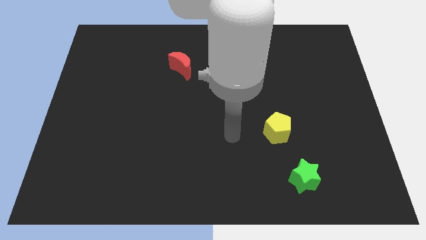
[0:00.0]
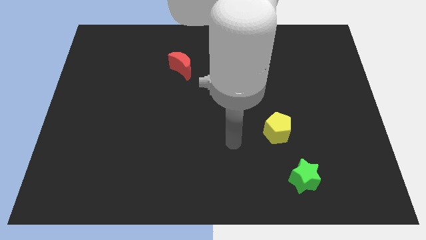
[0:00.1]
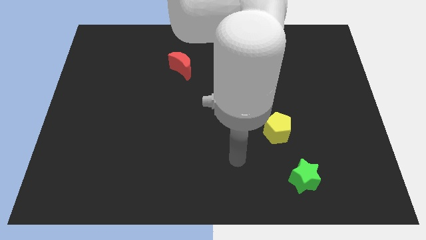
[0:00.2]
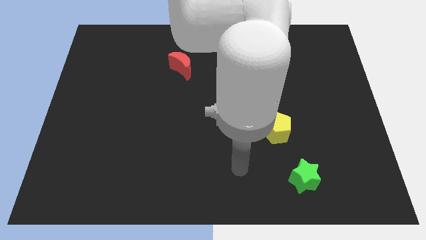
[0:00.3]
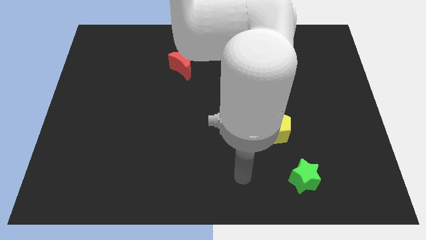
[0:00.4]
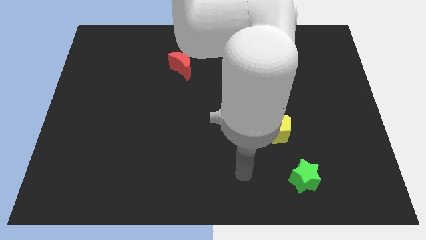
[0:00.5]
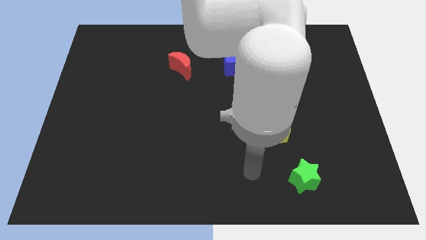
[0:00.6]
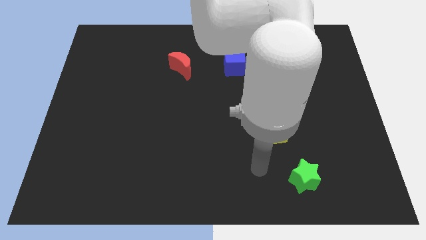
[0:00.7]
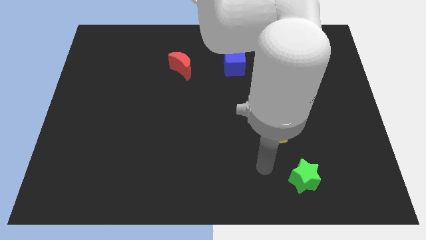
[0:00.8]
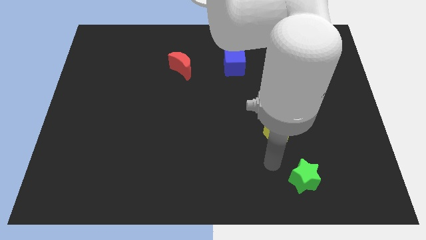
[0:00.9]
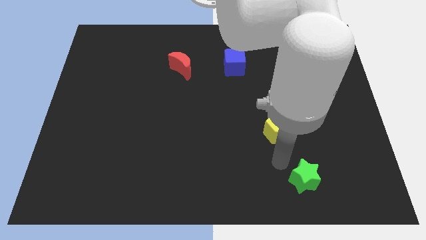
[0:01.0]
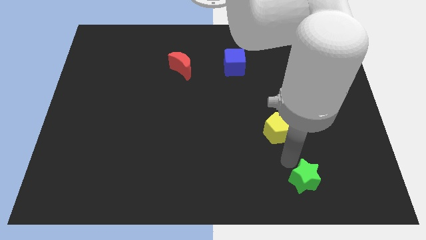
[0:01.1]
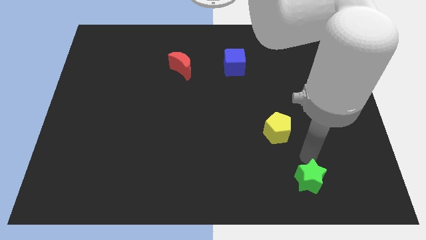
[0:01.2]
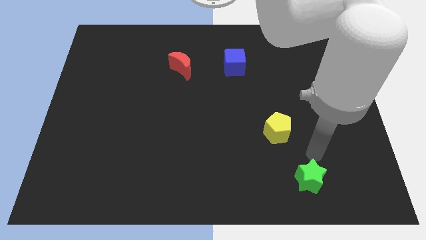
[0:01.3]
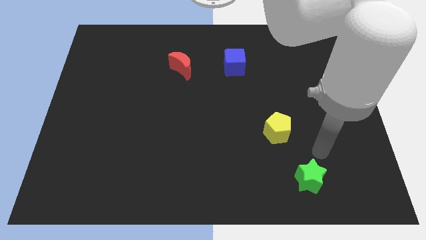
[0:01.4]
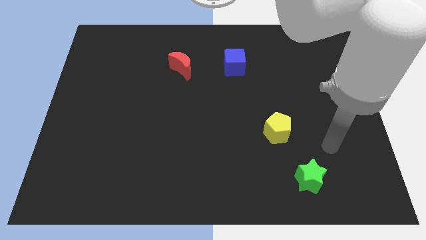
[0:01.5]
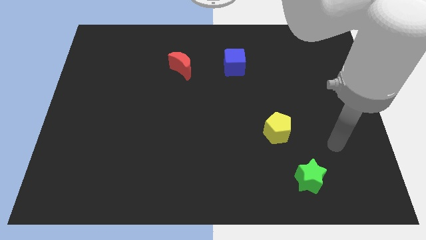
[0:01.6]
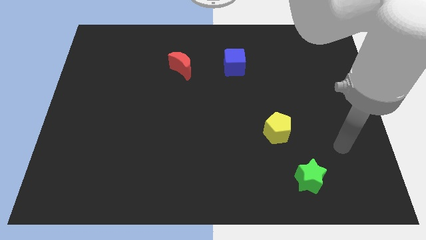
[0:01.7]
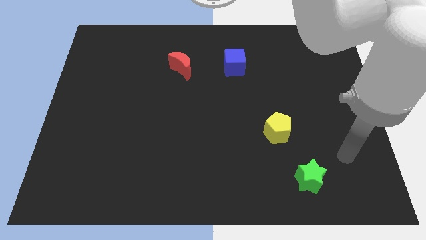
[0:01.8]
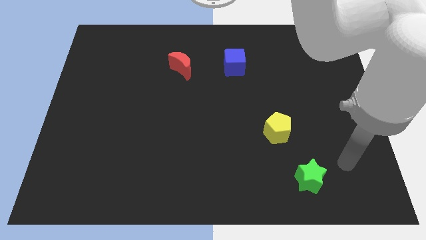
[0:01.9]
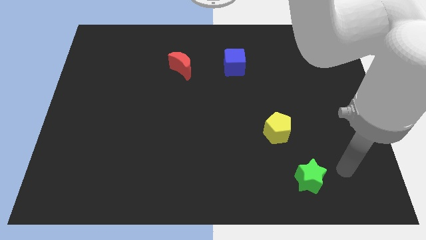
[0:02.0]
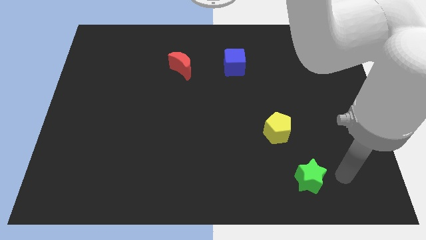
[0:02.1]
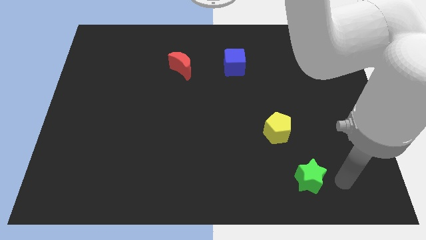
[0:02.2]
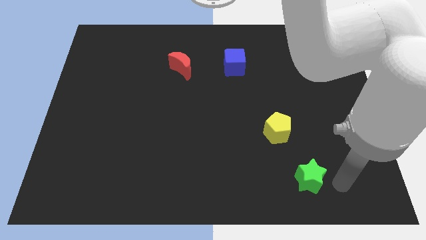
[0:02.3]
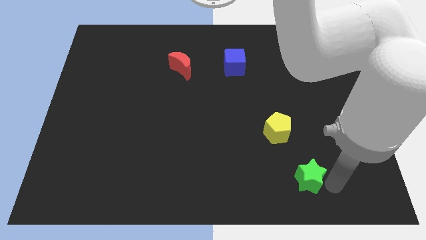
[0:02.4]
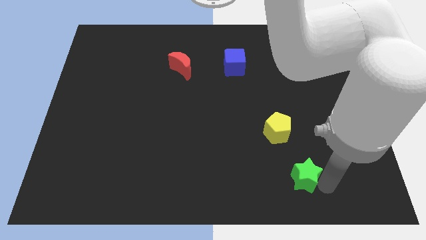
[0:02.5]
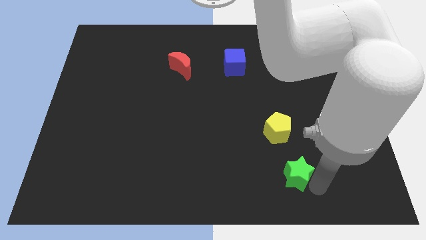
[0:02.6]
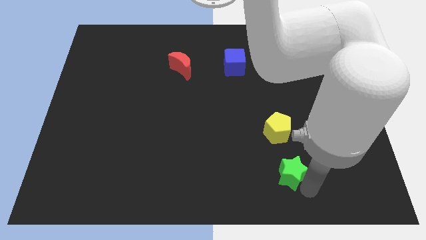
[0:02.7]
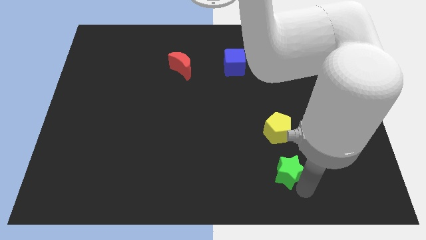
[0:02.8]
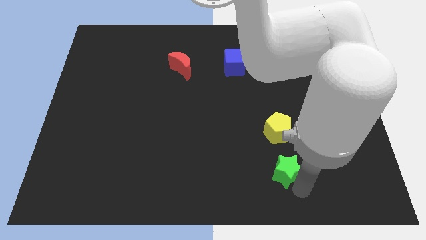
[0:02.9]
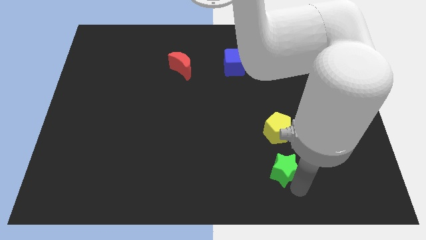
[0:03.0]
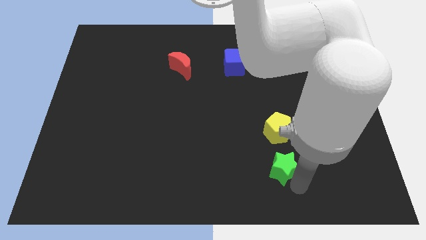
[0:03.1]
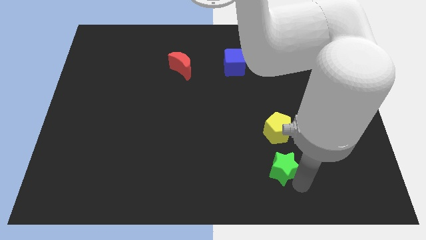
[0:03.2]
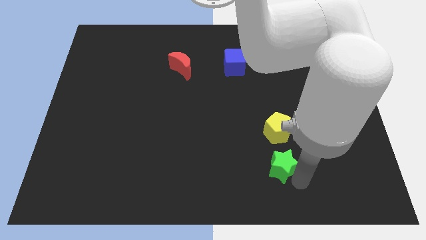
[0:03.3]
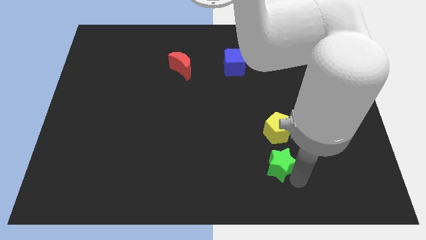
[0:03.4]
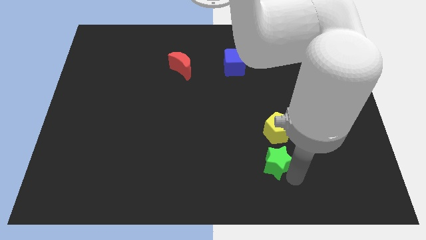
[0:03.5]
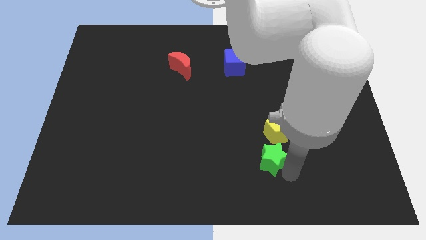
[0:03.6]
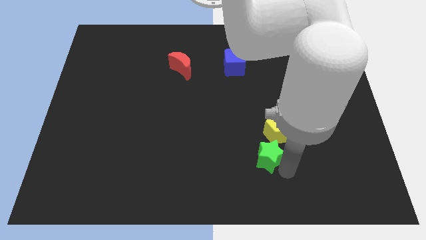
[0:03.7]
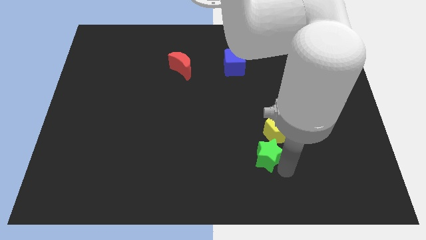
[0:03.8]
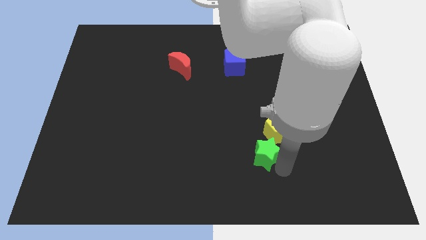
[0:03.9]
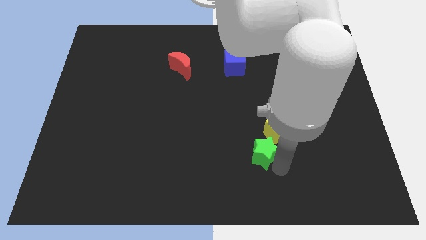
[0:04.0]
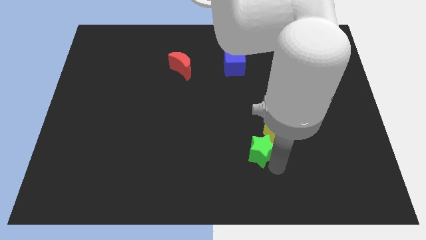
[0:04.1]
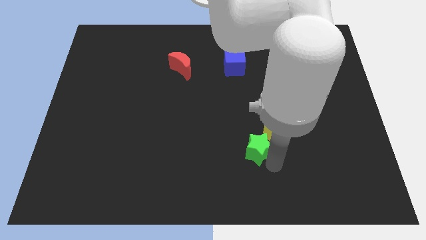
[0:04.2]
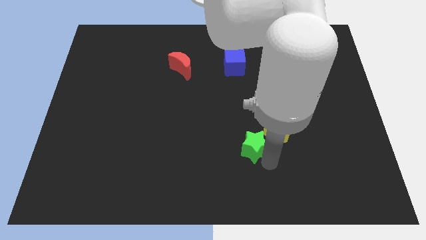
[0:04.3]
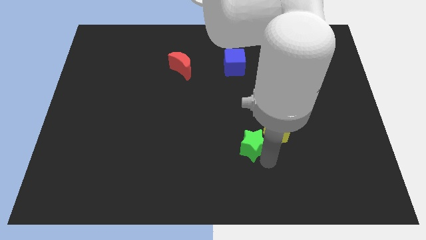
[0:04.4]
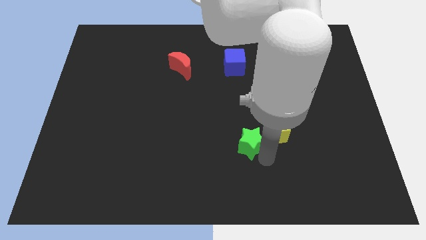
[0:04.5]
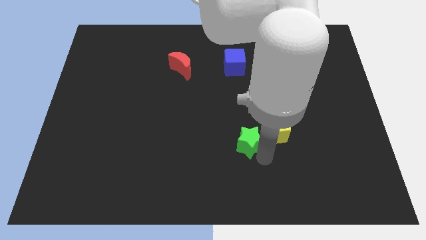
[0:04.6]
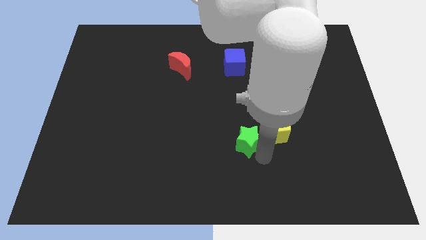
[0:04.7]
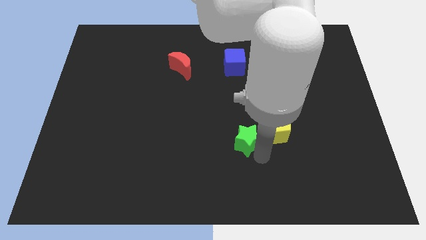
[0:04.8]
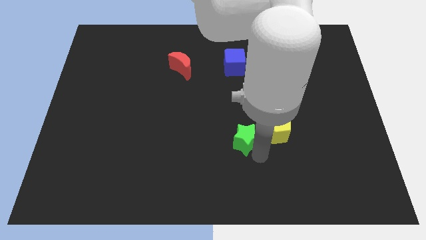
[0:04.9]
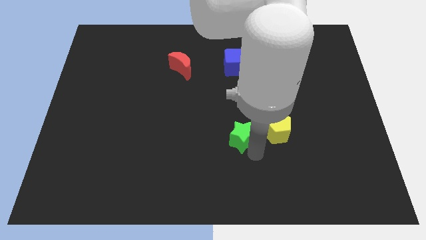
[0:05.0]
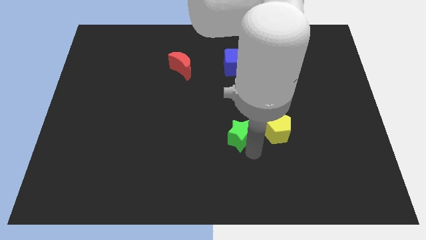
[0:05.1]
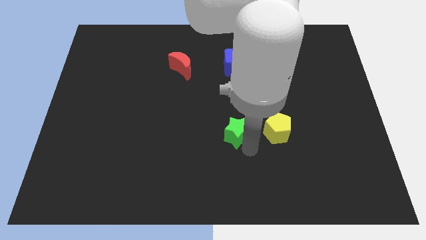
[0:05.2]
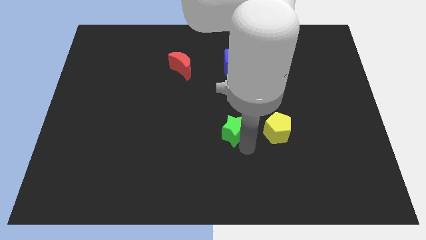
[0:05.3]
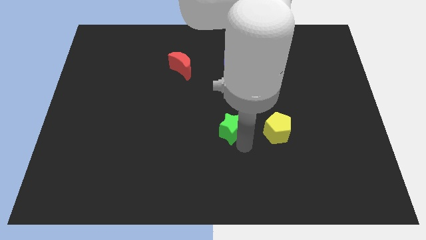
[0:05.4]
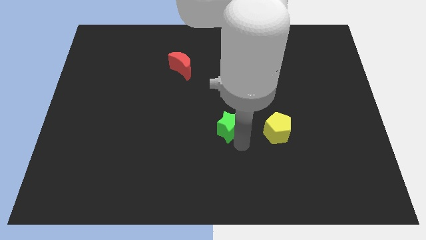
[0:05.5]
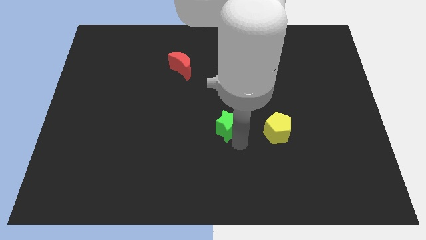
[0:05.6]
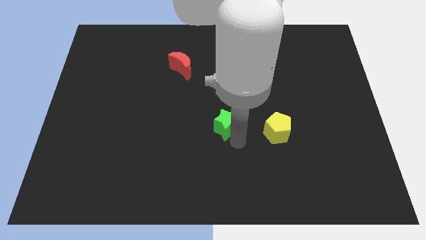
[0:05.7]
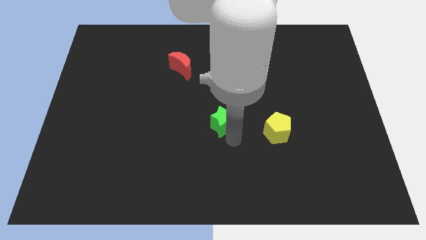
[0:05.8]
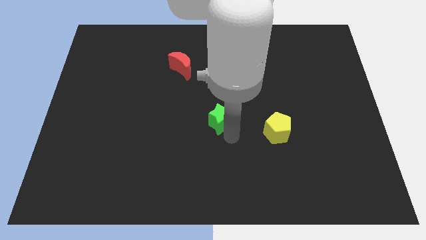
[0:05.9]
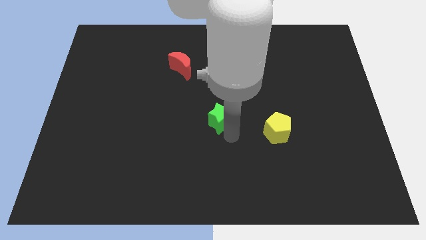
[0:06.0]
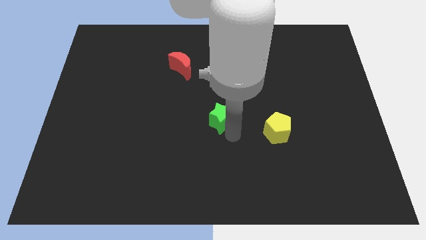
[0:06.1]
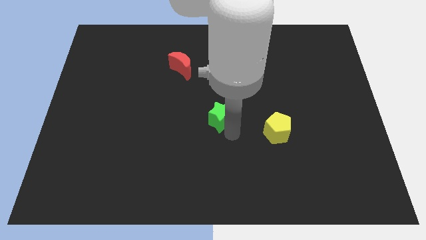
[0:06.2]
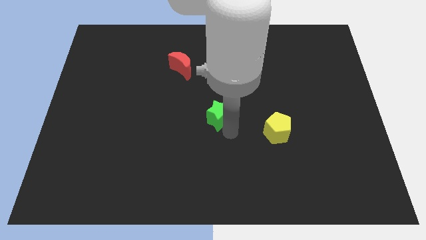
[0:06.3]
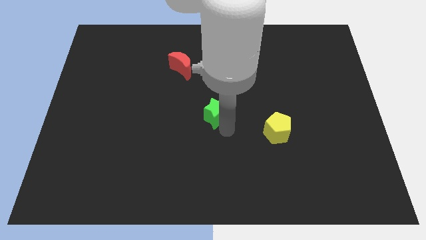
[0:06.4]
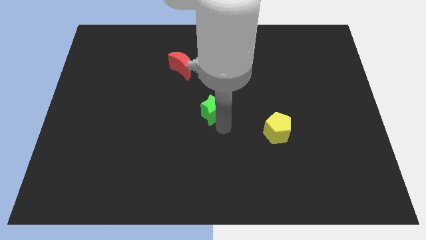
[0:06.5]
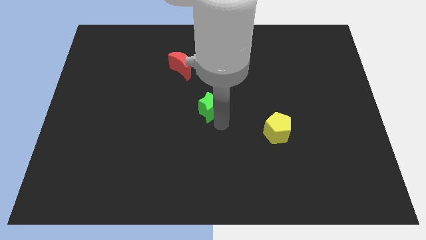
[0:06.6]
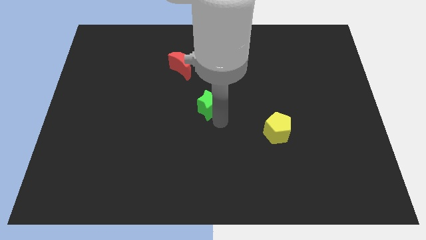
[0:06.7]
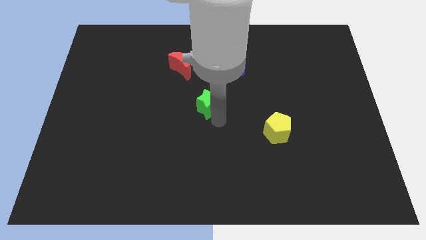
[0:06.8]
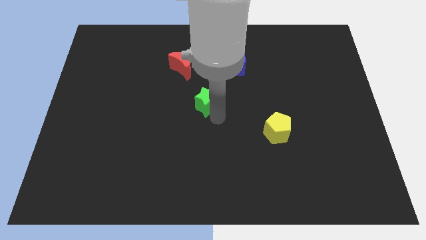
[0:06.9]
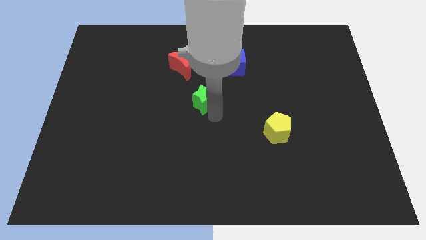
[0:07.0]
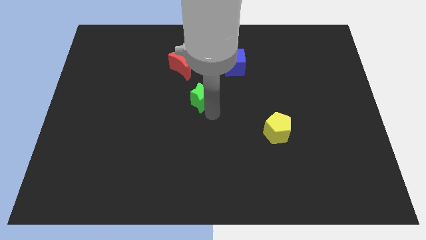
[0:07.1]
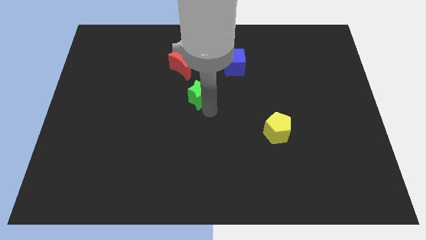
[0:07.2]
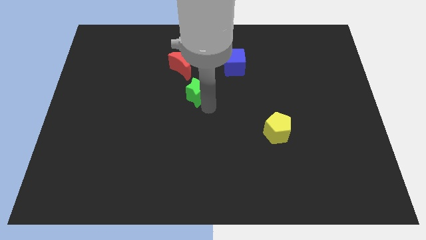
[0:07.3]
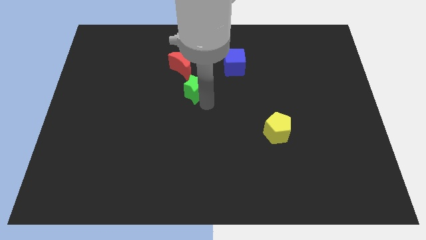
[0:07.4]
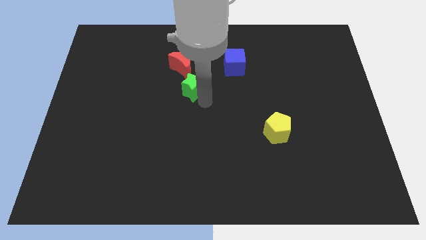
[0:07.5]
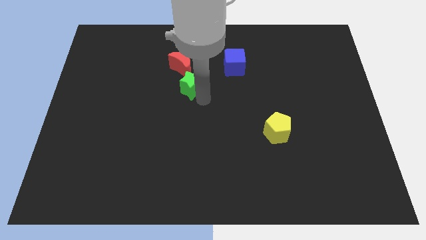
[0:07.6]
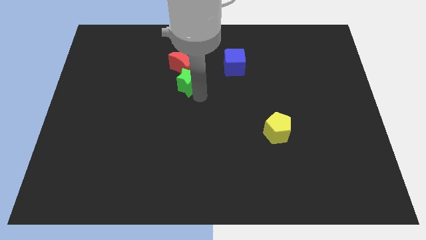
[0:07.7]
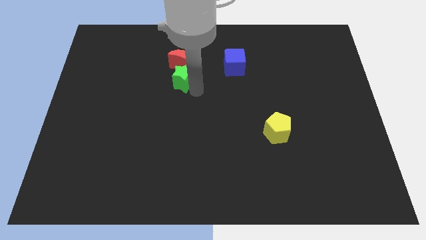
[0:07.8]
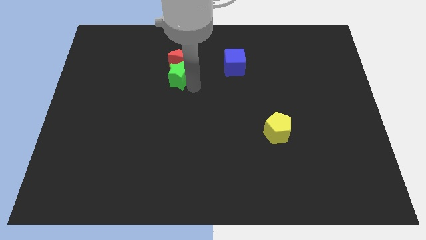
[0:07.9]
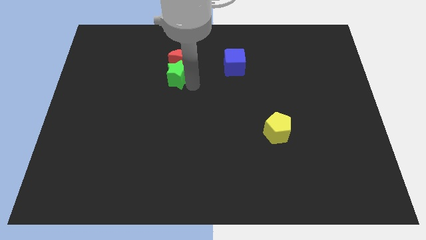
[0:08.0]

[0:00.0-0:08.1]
move the green block to the red block

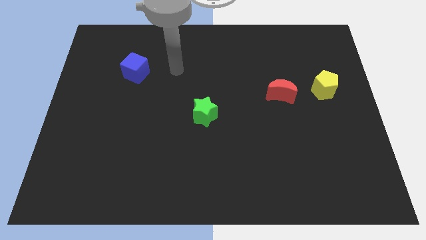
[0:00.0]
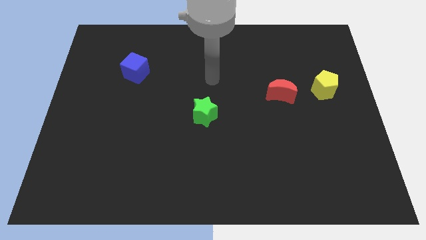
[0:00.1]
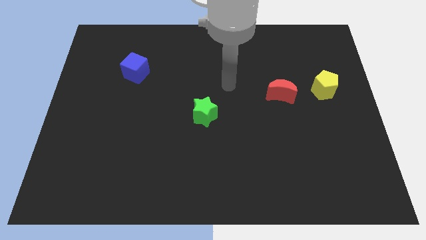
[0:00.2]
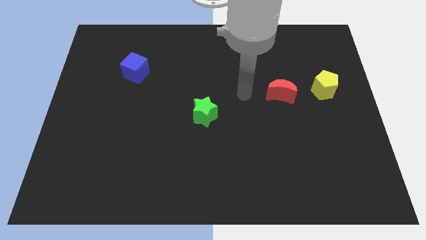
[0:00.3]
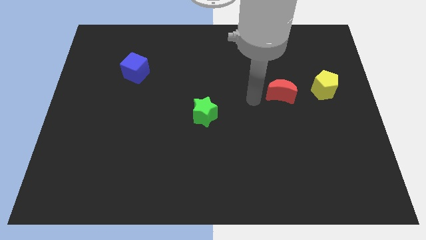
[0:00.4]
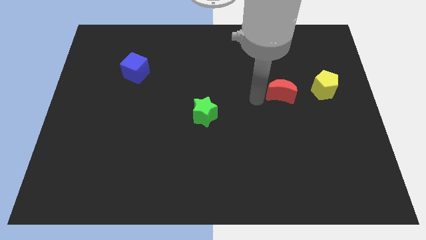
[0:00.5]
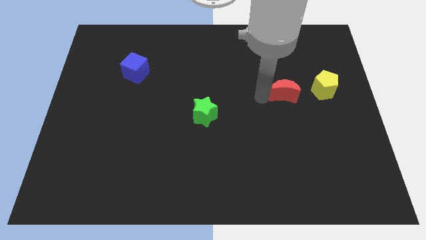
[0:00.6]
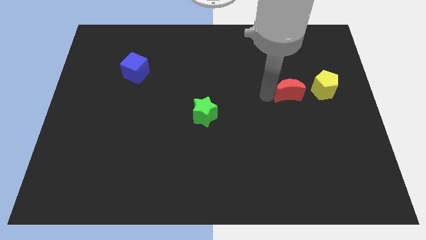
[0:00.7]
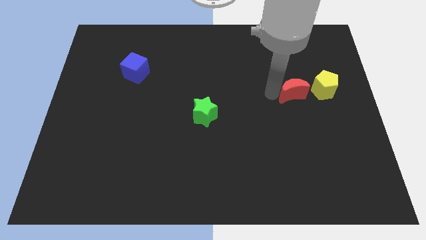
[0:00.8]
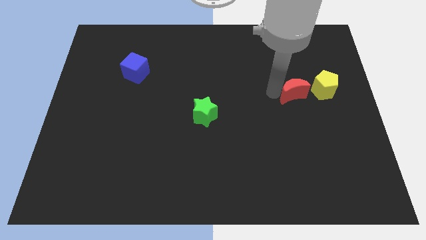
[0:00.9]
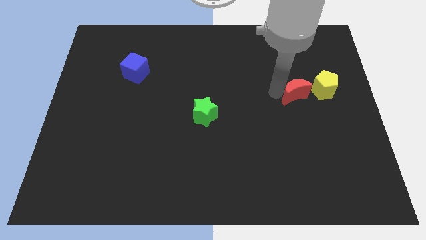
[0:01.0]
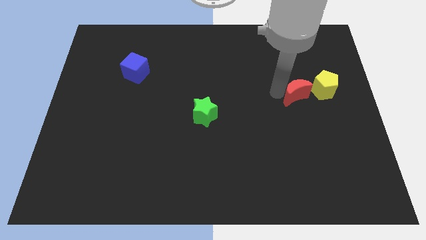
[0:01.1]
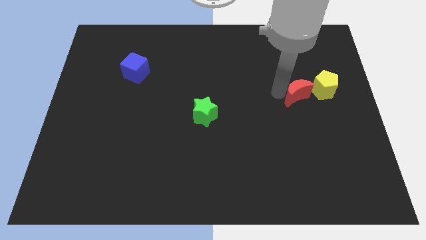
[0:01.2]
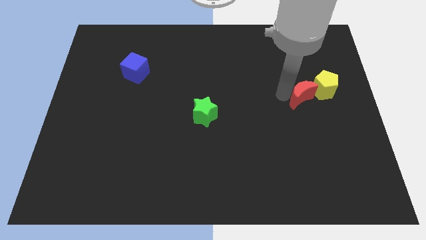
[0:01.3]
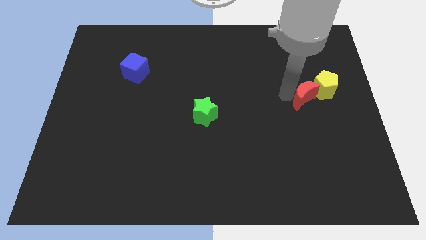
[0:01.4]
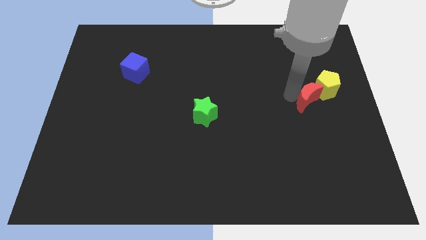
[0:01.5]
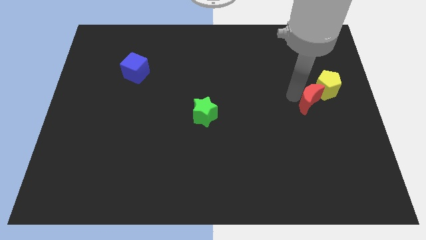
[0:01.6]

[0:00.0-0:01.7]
push the moon close to the yellow pentagon
